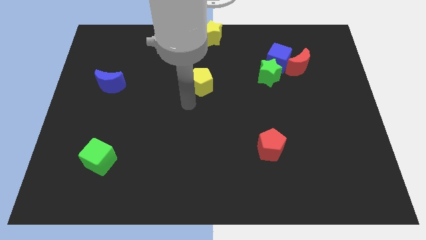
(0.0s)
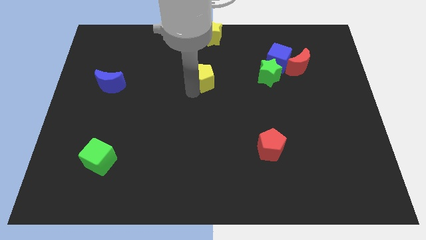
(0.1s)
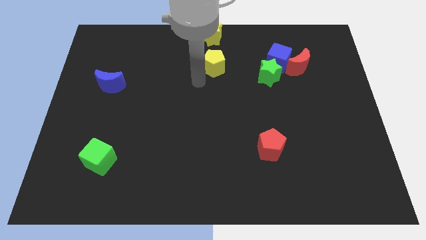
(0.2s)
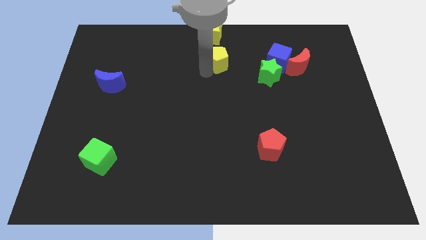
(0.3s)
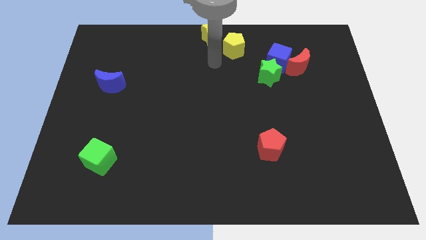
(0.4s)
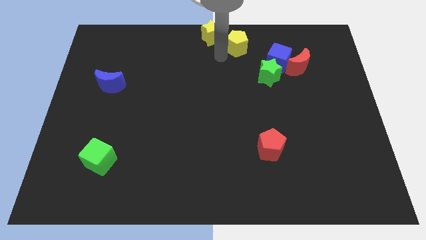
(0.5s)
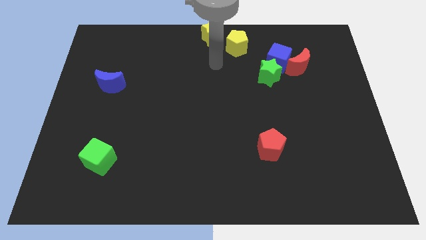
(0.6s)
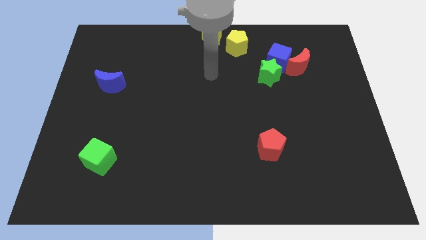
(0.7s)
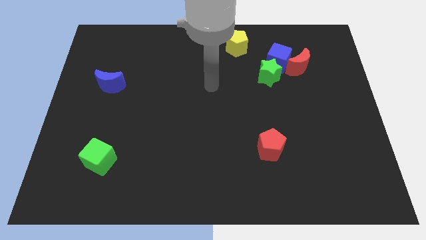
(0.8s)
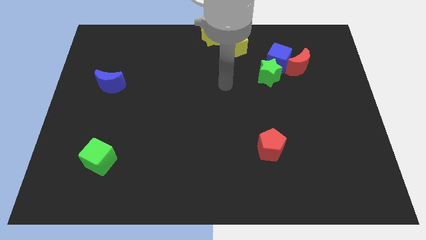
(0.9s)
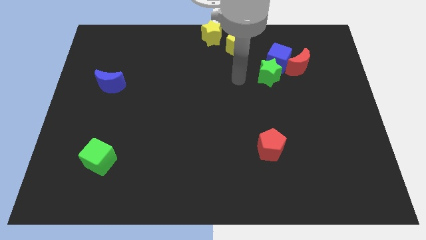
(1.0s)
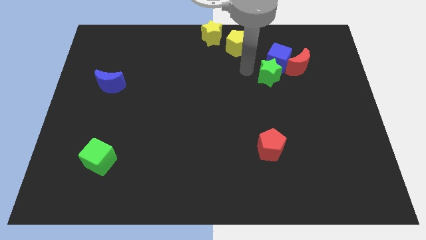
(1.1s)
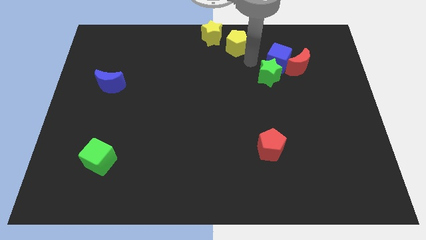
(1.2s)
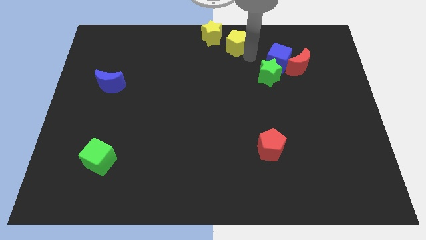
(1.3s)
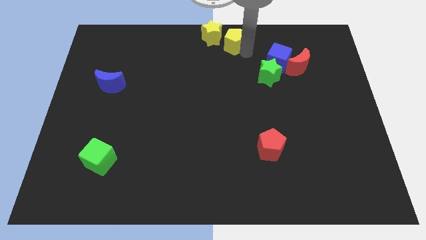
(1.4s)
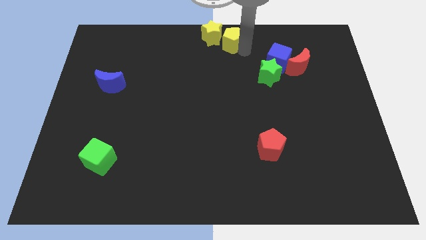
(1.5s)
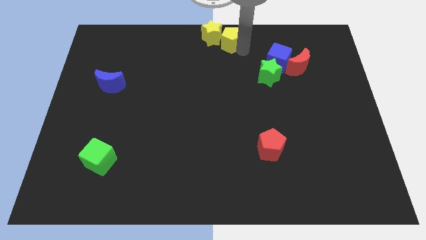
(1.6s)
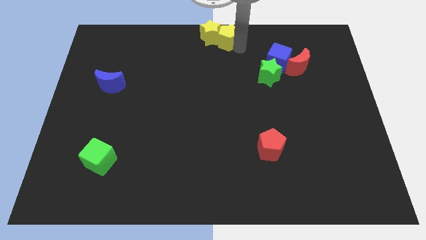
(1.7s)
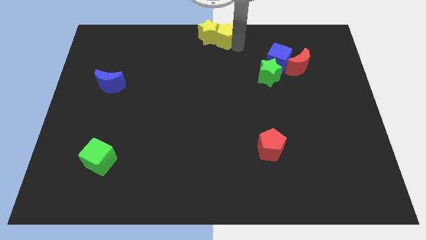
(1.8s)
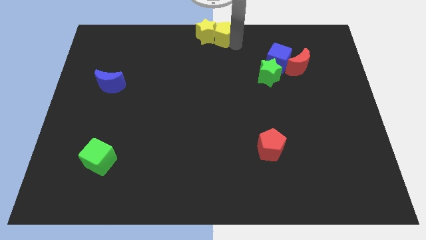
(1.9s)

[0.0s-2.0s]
place the yellow pentagon at the top center

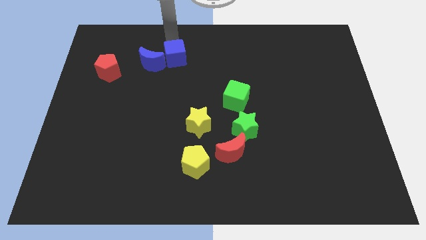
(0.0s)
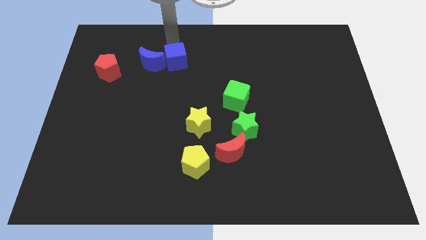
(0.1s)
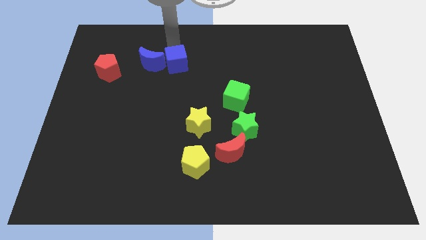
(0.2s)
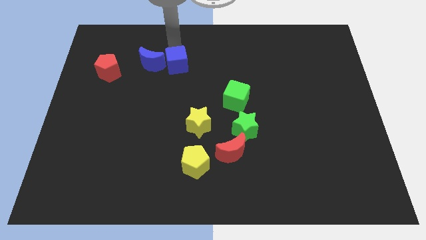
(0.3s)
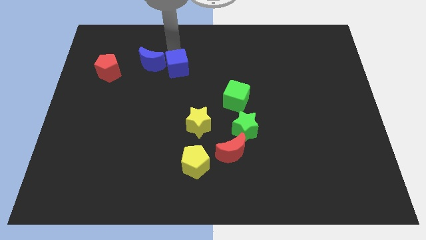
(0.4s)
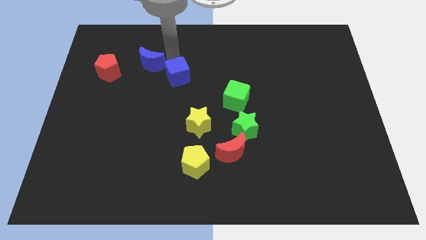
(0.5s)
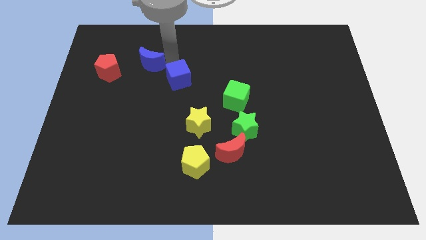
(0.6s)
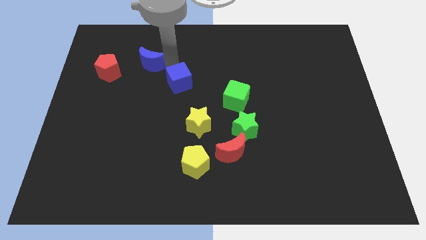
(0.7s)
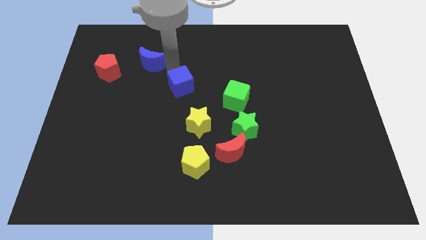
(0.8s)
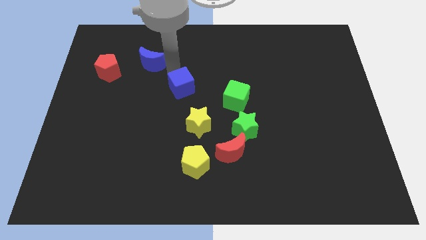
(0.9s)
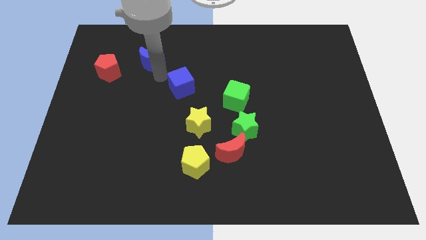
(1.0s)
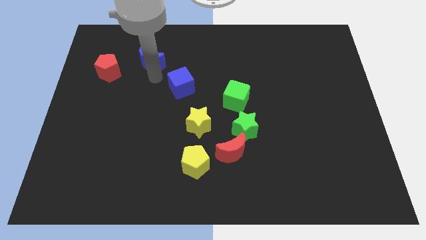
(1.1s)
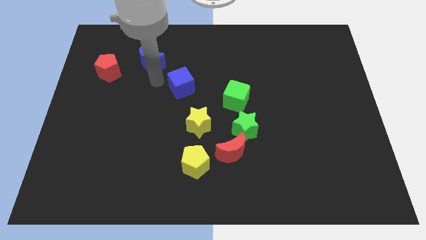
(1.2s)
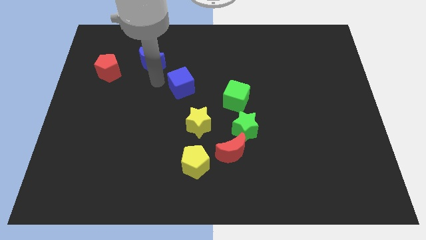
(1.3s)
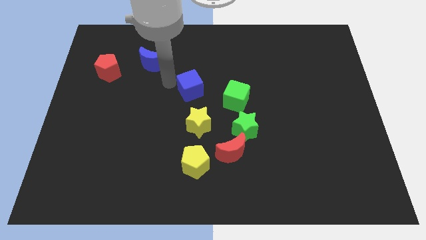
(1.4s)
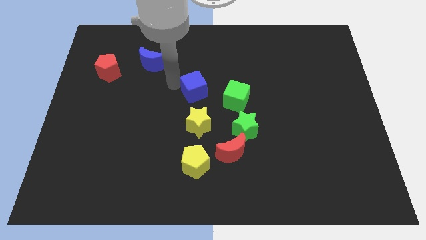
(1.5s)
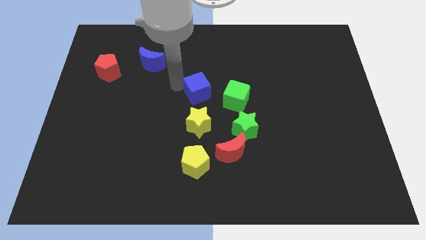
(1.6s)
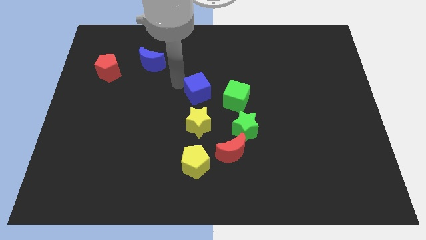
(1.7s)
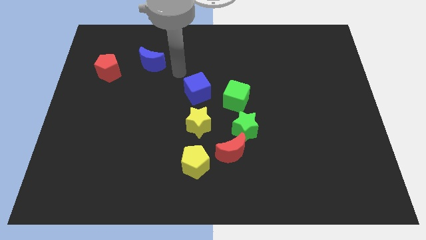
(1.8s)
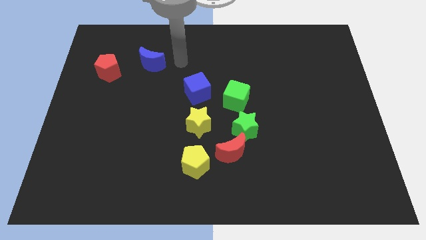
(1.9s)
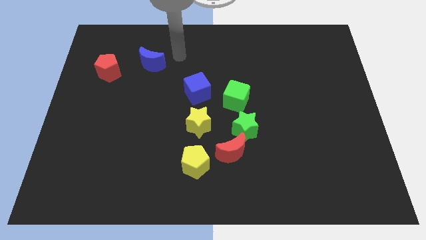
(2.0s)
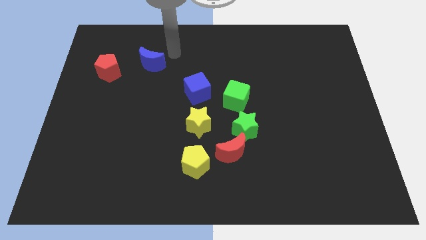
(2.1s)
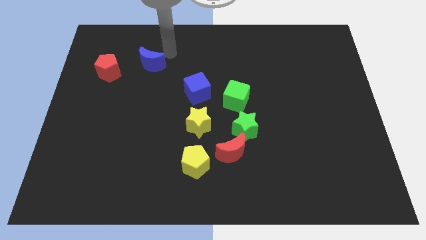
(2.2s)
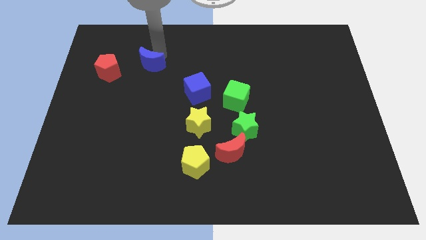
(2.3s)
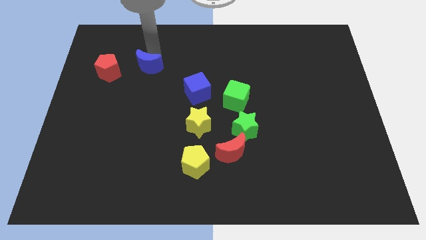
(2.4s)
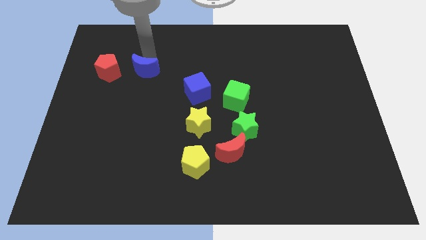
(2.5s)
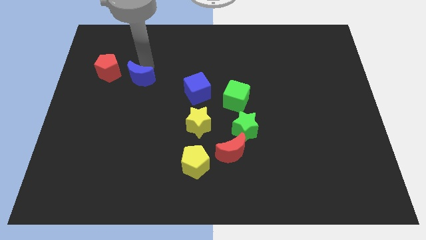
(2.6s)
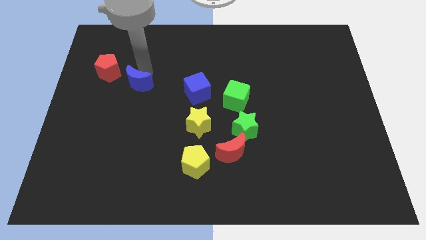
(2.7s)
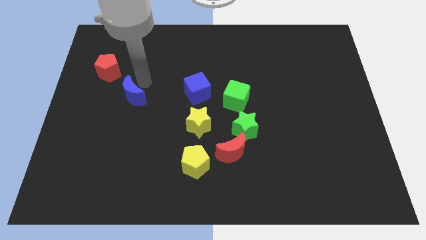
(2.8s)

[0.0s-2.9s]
separate the blue moon and blue cube

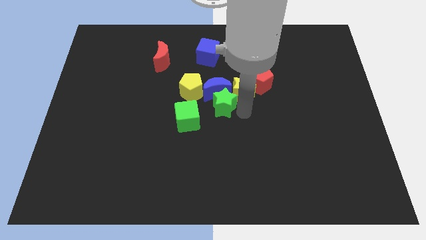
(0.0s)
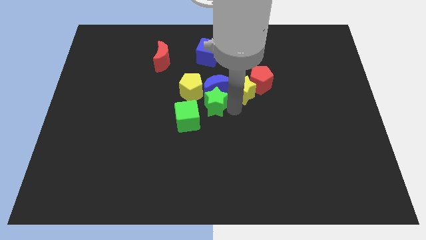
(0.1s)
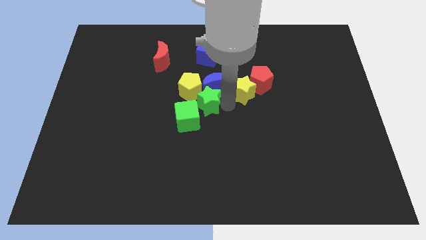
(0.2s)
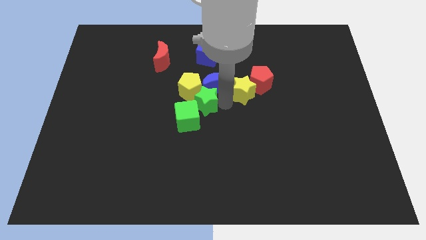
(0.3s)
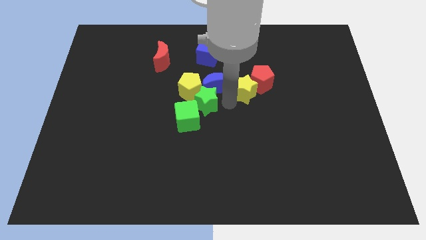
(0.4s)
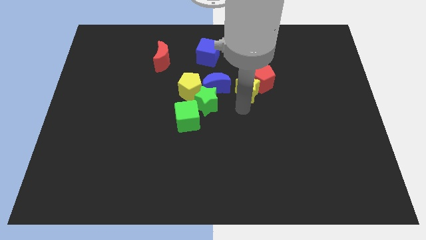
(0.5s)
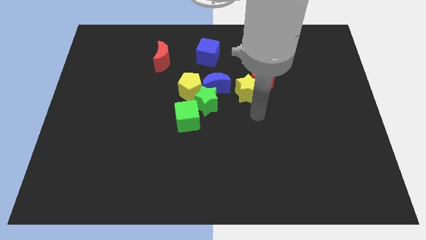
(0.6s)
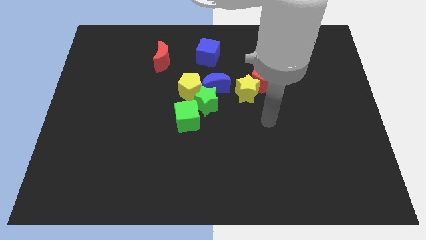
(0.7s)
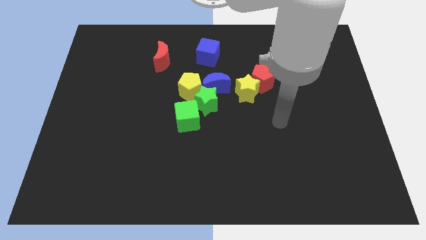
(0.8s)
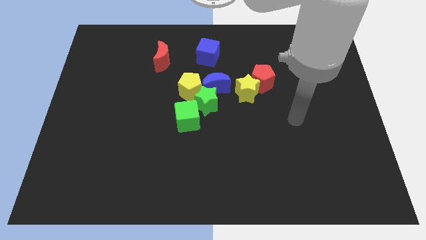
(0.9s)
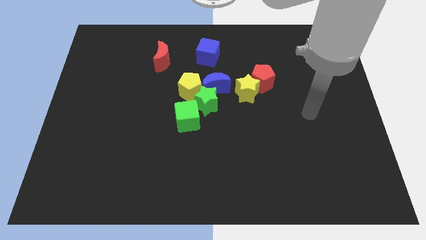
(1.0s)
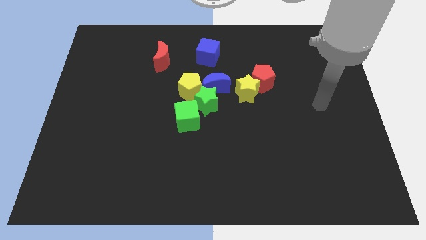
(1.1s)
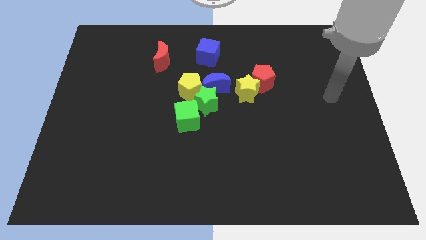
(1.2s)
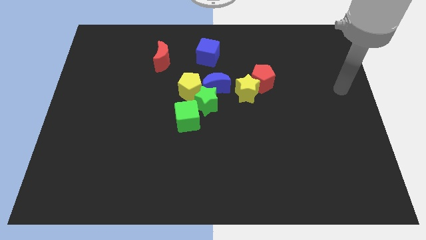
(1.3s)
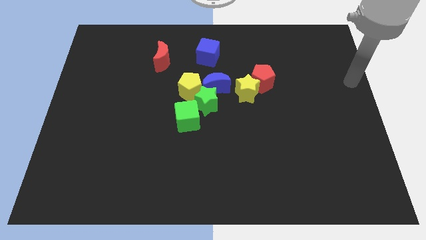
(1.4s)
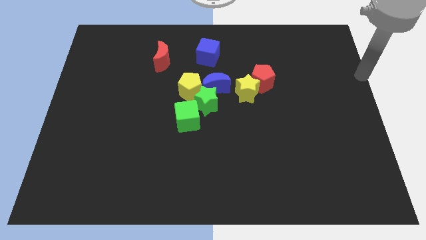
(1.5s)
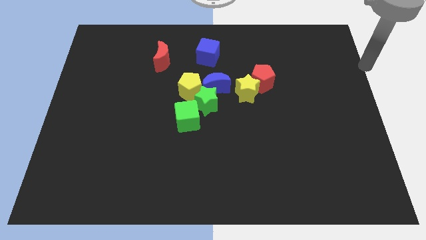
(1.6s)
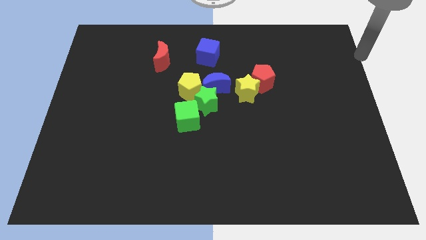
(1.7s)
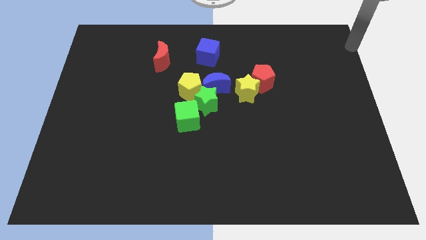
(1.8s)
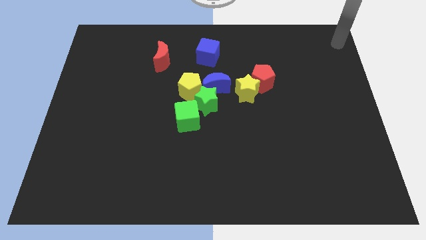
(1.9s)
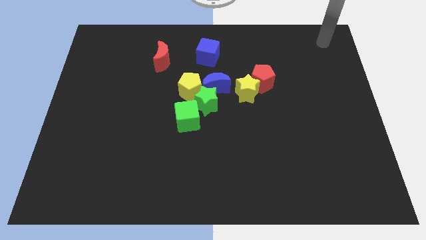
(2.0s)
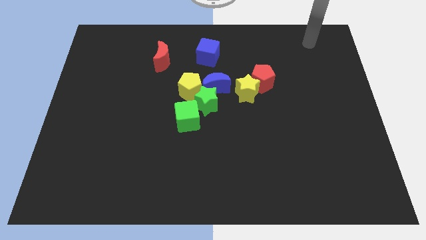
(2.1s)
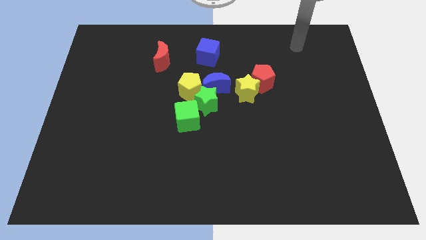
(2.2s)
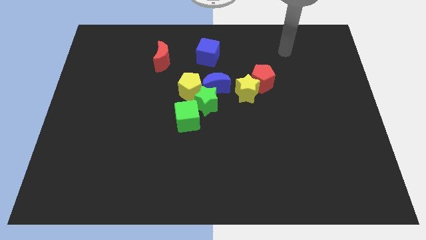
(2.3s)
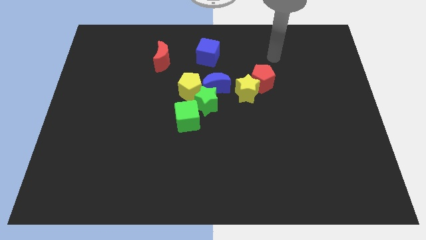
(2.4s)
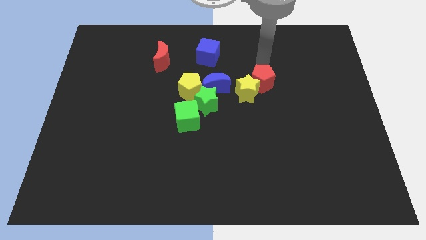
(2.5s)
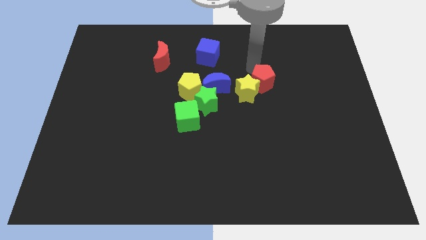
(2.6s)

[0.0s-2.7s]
place your arm to the top of red pentagon

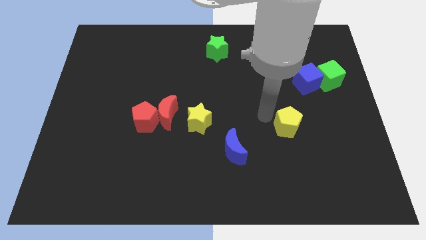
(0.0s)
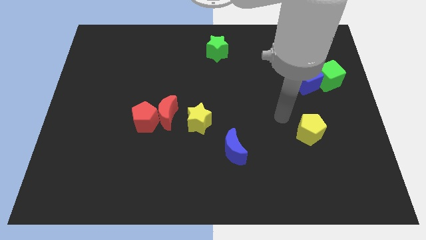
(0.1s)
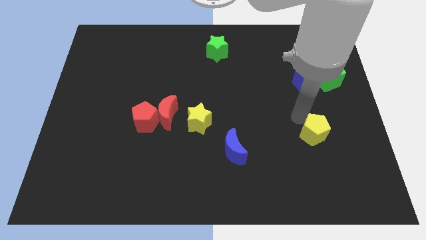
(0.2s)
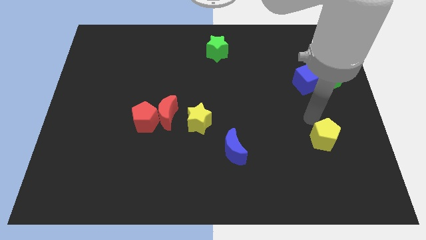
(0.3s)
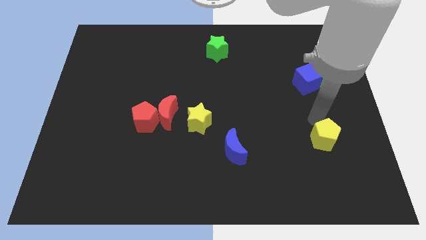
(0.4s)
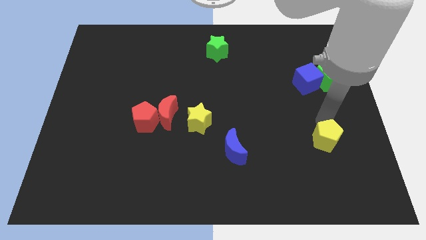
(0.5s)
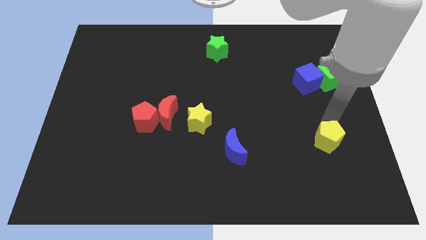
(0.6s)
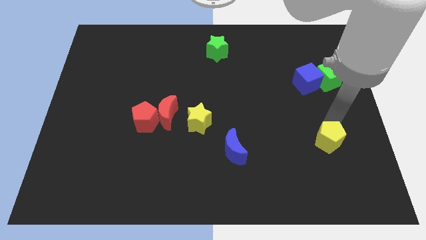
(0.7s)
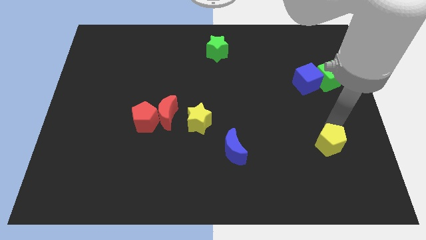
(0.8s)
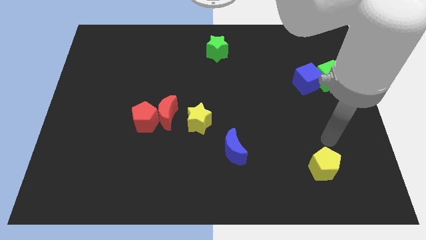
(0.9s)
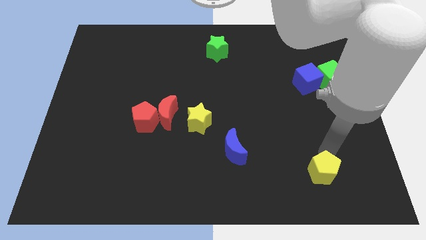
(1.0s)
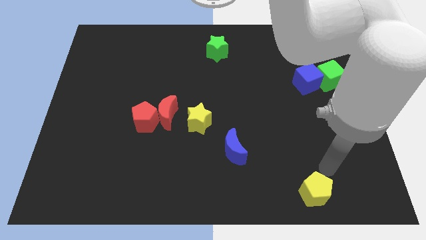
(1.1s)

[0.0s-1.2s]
place the yellow pentagon right to the blue moon
